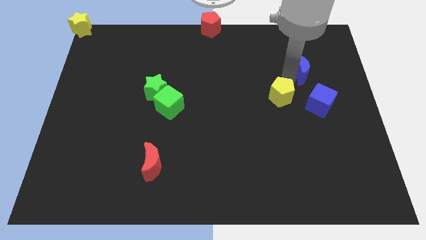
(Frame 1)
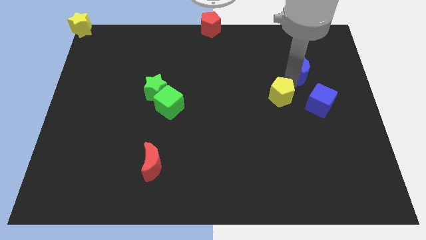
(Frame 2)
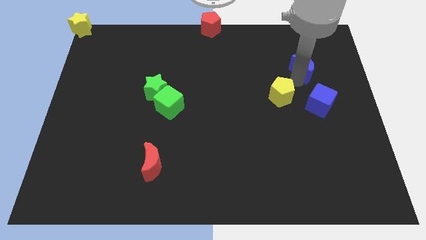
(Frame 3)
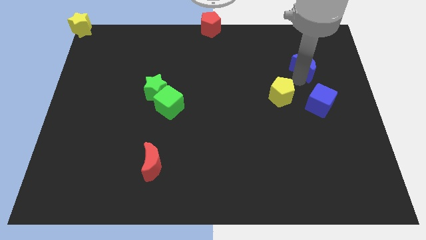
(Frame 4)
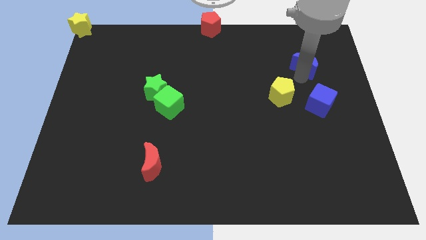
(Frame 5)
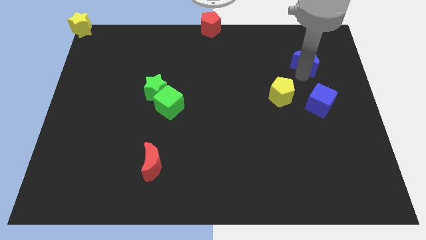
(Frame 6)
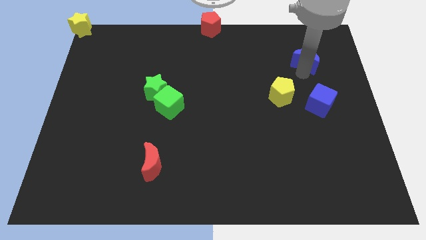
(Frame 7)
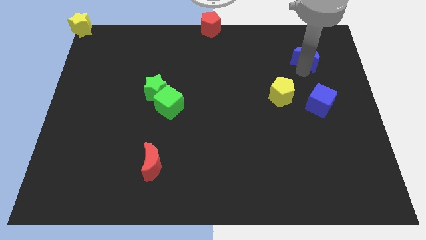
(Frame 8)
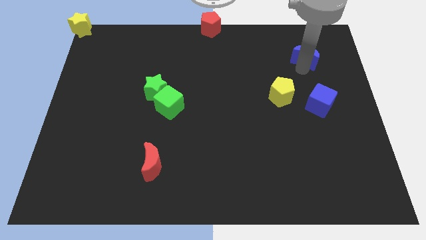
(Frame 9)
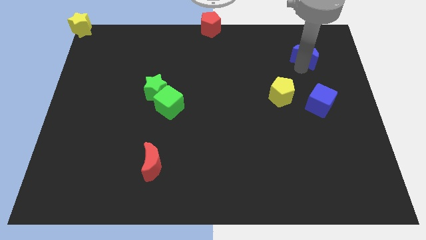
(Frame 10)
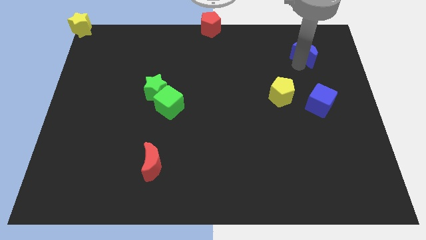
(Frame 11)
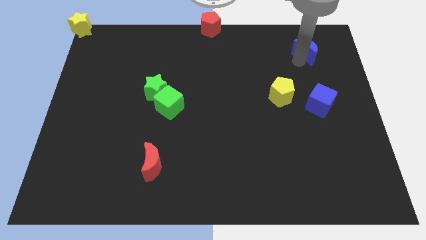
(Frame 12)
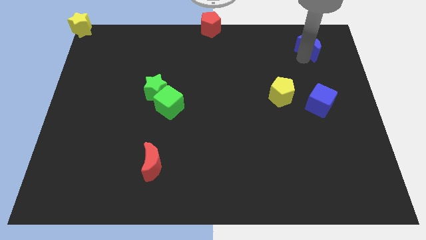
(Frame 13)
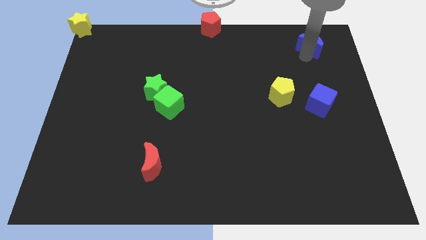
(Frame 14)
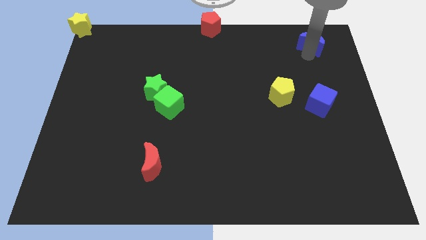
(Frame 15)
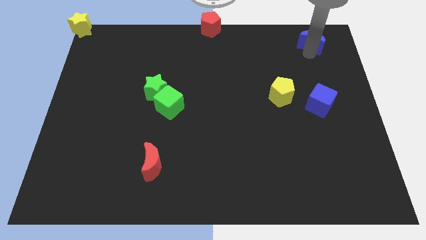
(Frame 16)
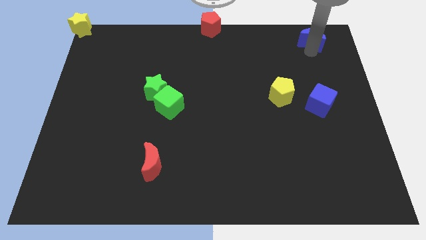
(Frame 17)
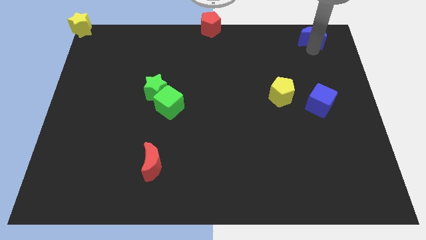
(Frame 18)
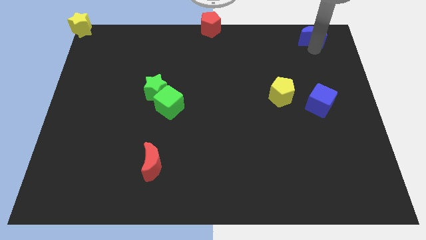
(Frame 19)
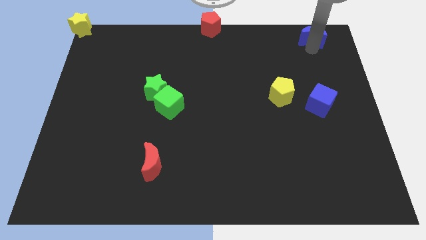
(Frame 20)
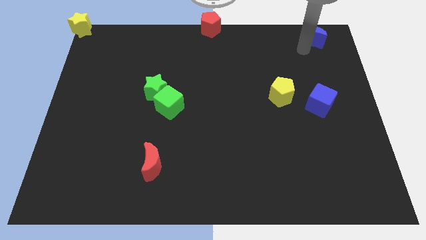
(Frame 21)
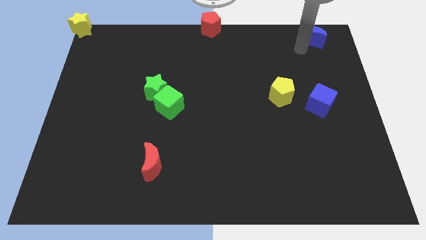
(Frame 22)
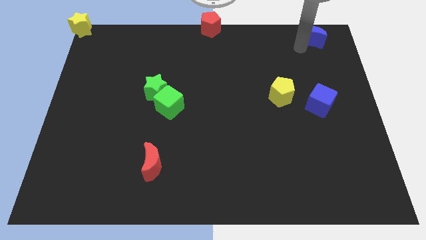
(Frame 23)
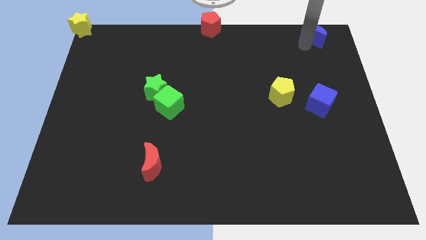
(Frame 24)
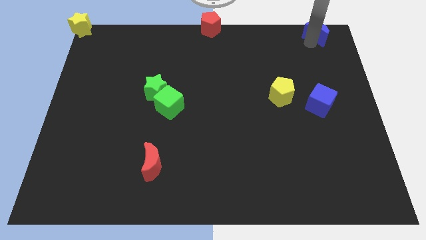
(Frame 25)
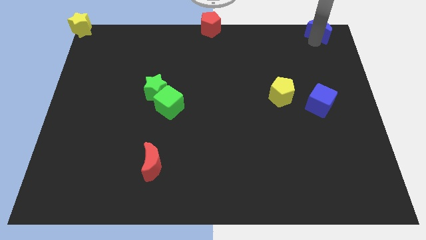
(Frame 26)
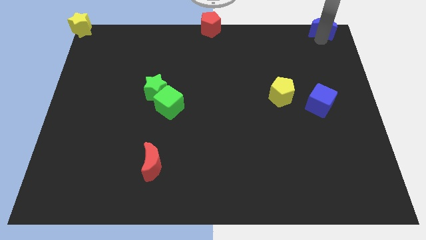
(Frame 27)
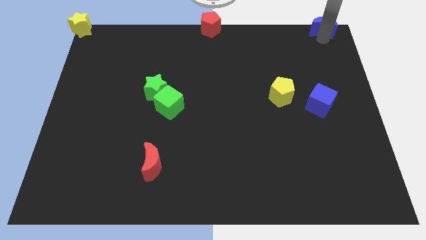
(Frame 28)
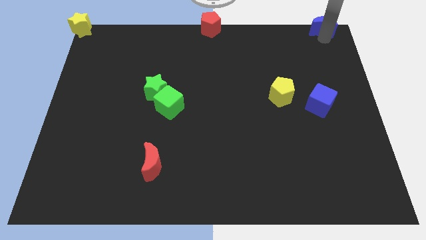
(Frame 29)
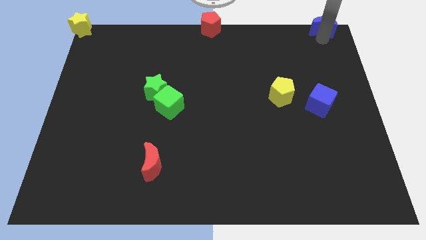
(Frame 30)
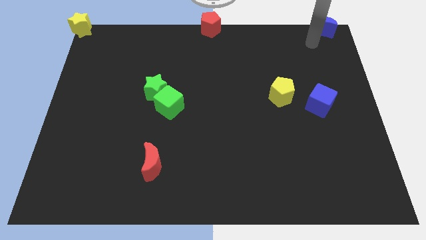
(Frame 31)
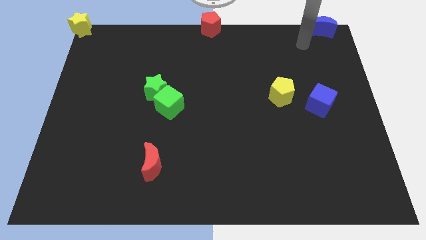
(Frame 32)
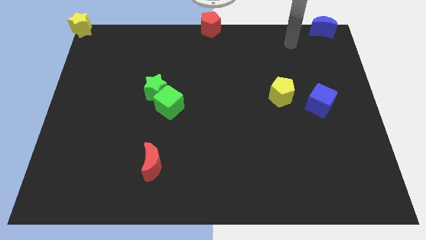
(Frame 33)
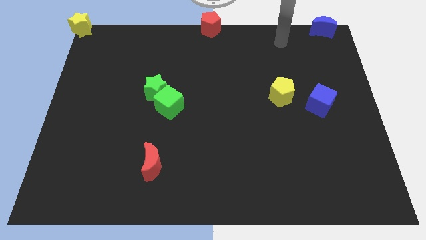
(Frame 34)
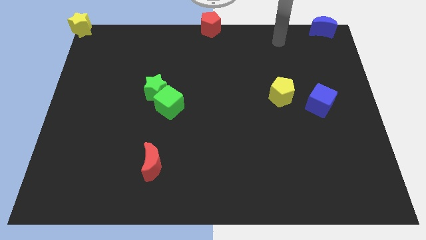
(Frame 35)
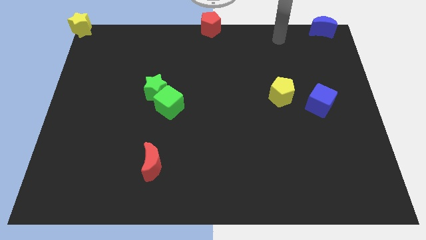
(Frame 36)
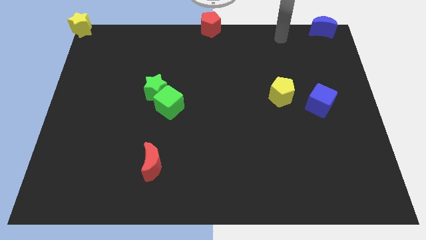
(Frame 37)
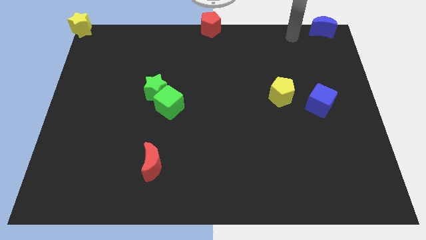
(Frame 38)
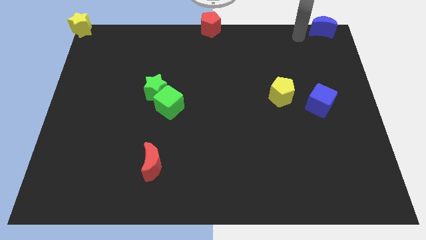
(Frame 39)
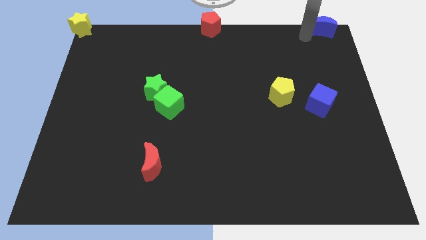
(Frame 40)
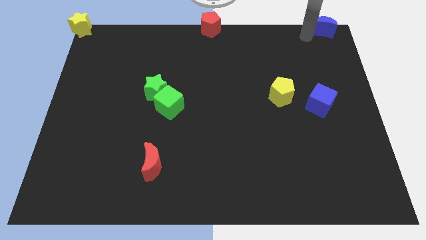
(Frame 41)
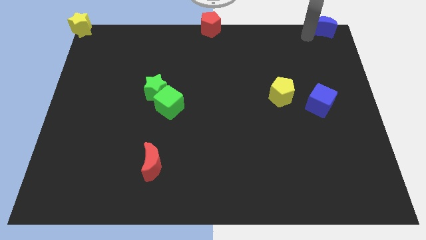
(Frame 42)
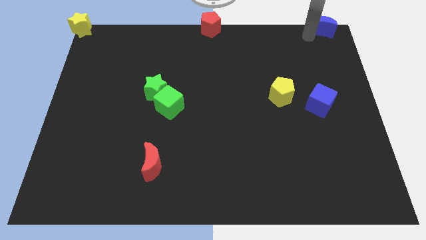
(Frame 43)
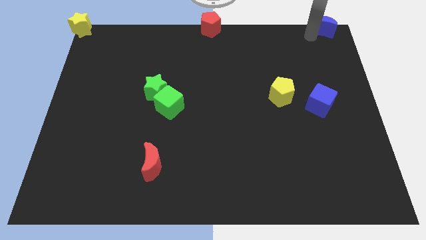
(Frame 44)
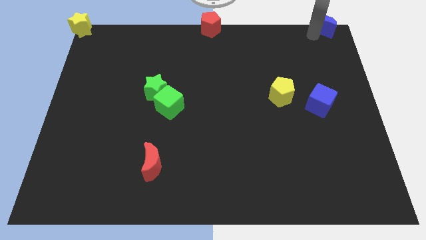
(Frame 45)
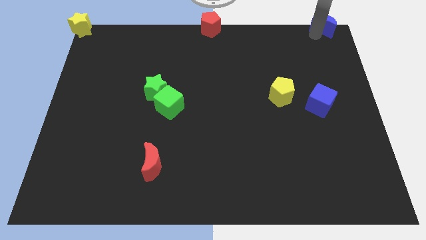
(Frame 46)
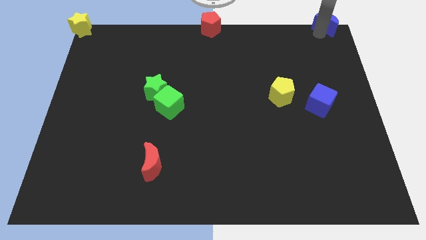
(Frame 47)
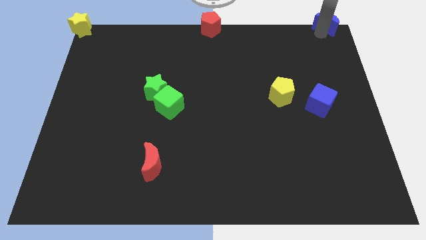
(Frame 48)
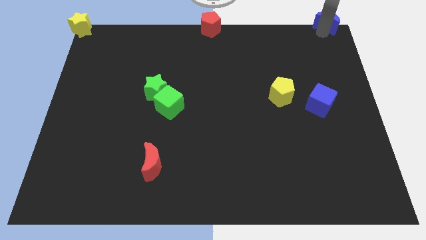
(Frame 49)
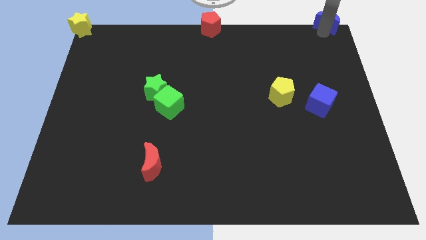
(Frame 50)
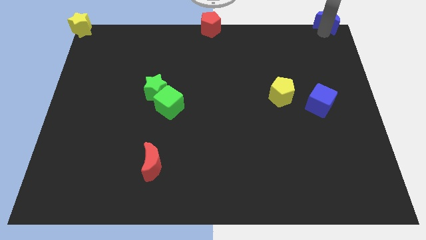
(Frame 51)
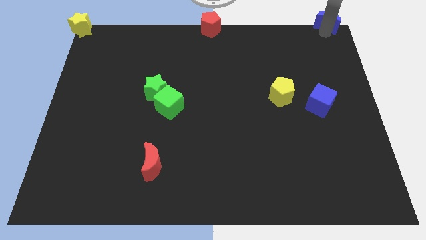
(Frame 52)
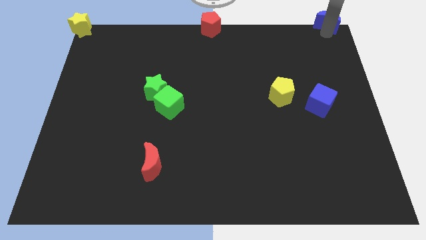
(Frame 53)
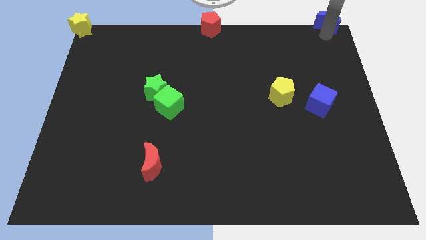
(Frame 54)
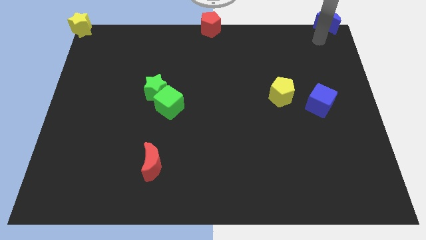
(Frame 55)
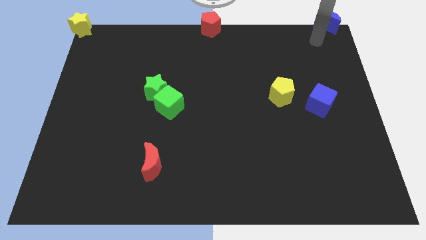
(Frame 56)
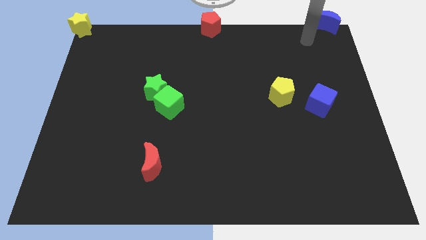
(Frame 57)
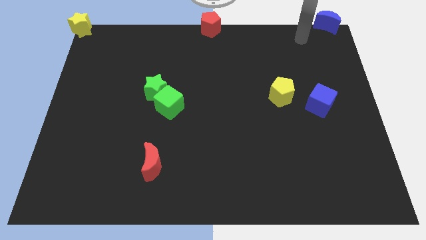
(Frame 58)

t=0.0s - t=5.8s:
push the blue moon to the top right corner

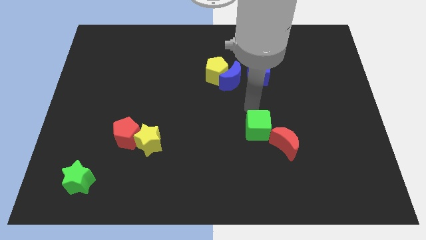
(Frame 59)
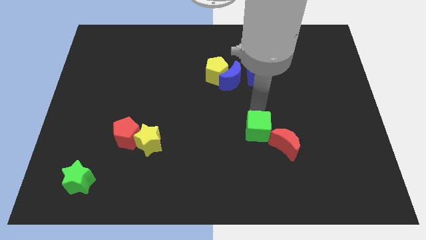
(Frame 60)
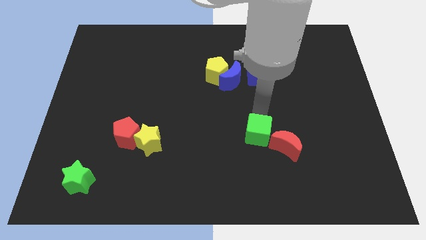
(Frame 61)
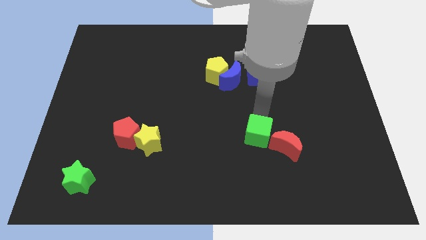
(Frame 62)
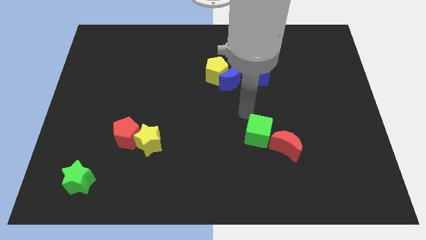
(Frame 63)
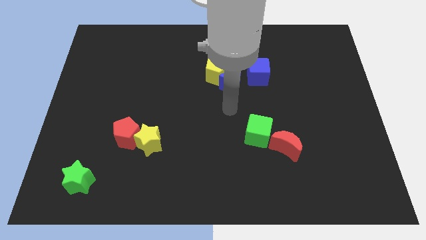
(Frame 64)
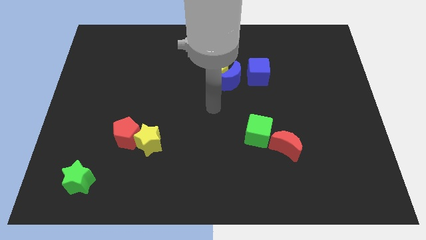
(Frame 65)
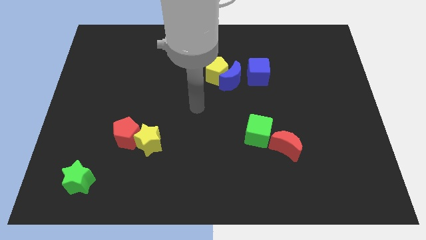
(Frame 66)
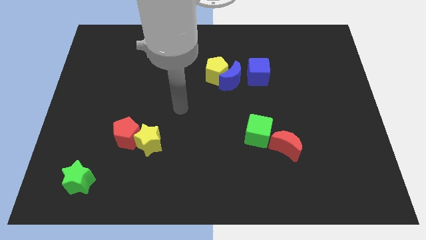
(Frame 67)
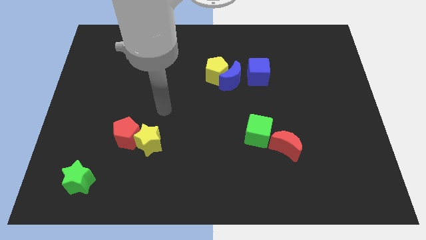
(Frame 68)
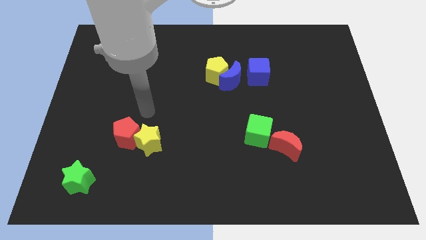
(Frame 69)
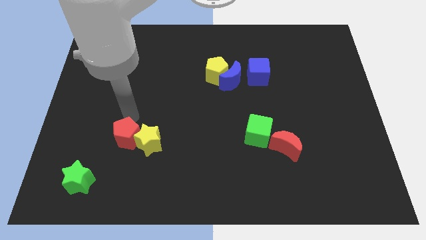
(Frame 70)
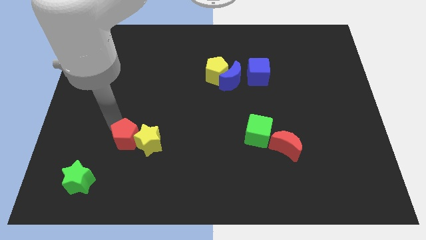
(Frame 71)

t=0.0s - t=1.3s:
move your arm towards red pentagon

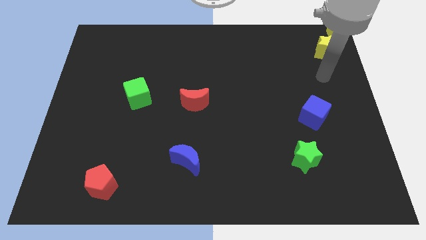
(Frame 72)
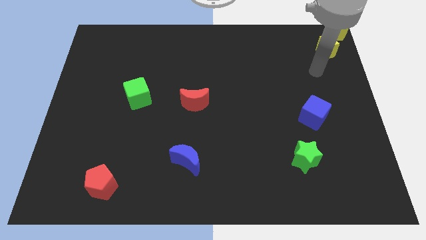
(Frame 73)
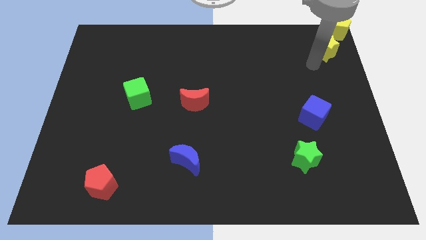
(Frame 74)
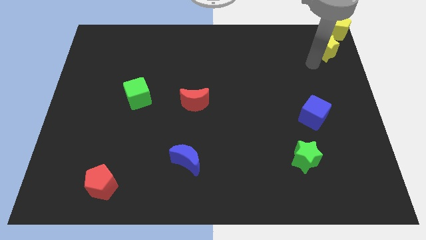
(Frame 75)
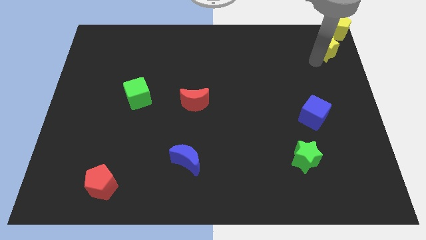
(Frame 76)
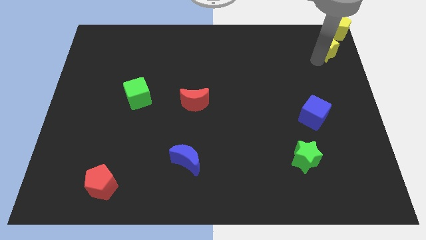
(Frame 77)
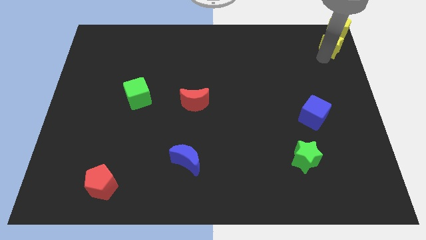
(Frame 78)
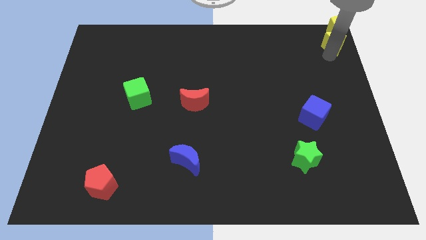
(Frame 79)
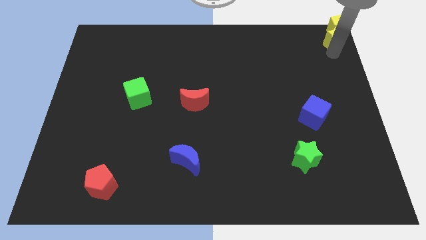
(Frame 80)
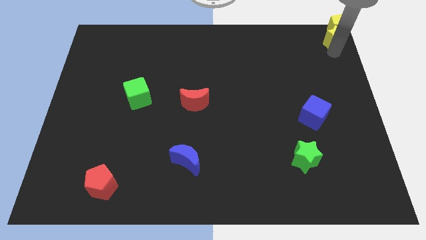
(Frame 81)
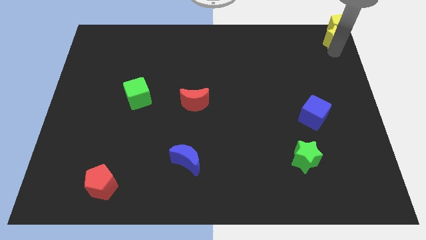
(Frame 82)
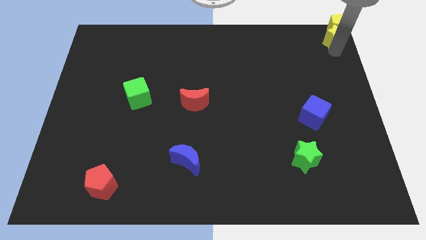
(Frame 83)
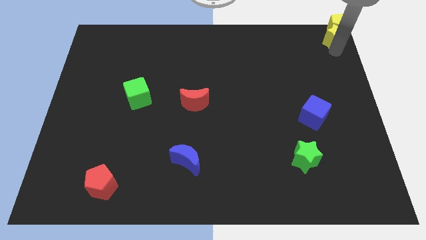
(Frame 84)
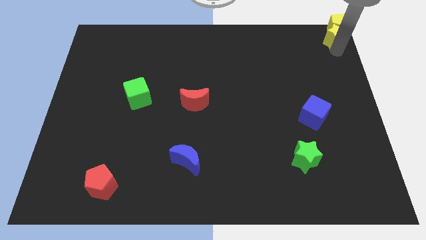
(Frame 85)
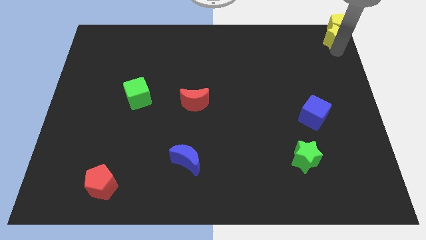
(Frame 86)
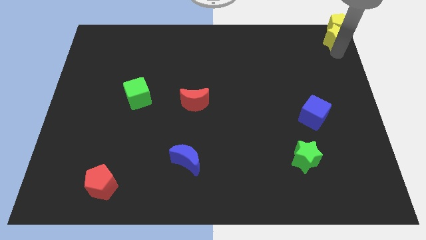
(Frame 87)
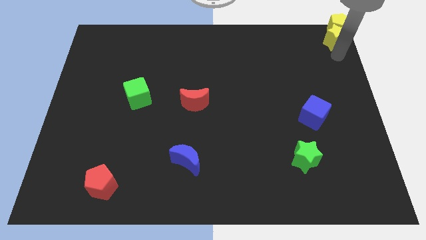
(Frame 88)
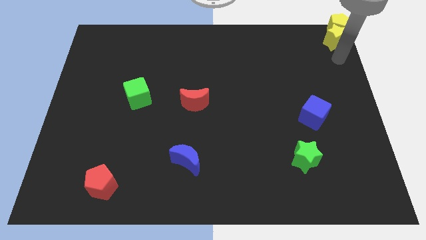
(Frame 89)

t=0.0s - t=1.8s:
push the yellow star into the yellow pentagon
